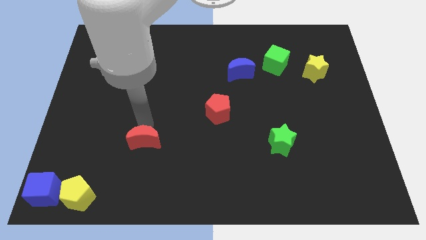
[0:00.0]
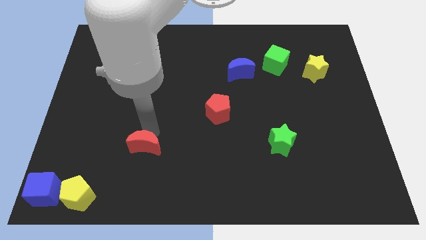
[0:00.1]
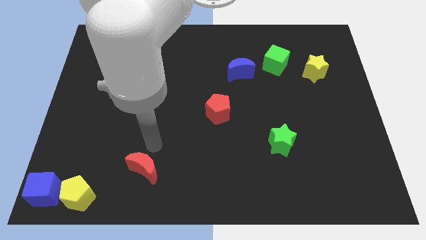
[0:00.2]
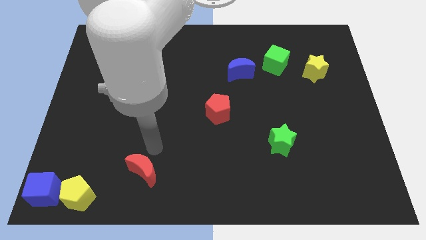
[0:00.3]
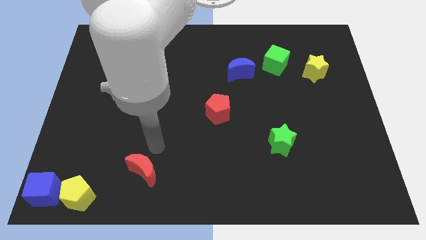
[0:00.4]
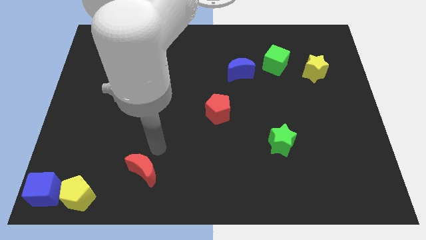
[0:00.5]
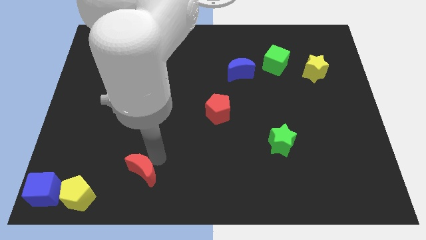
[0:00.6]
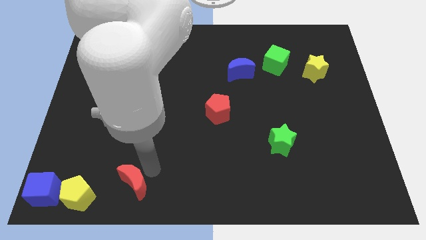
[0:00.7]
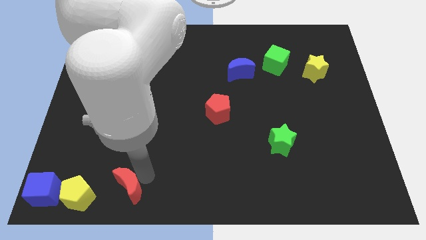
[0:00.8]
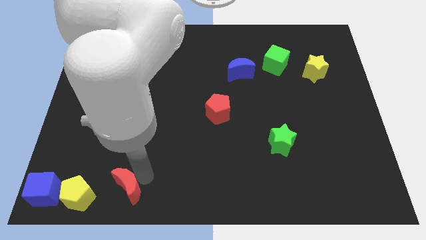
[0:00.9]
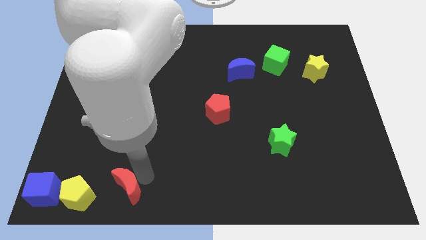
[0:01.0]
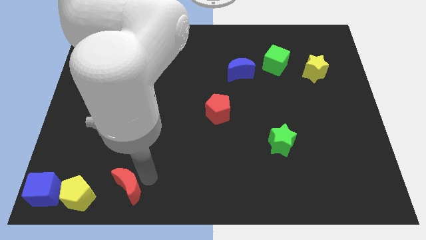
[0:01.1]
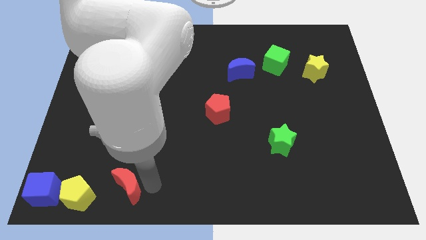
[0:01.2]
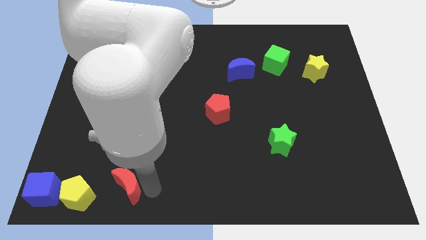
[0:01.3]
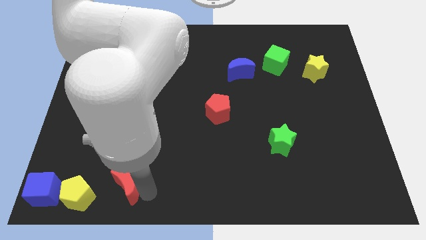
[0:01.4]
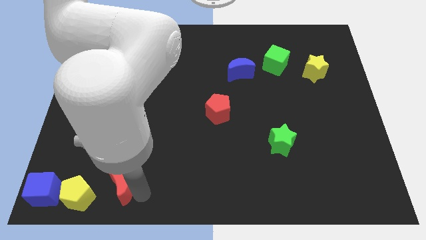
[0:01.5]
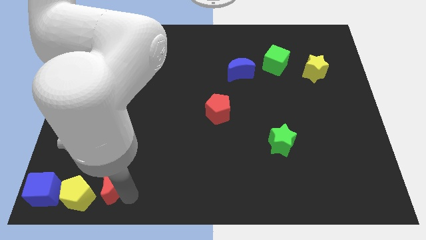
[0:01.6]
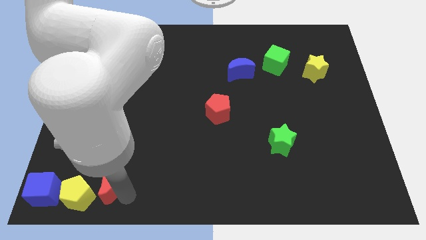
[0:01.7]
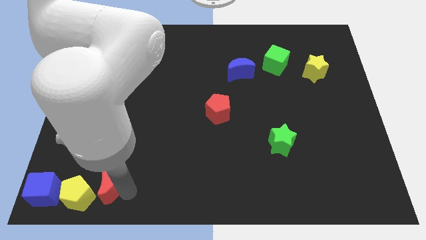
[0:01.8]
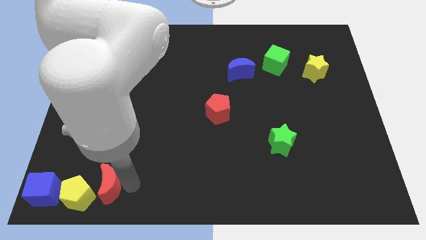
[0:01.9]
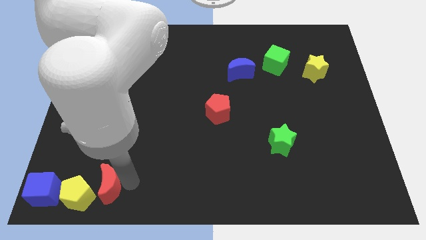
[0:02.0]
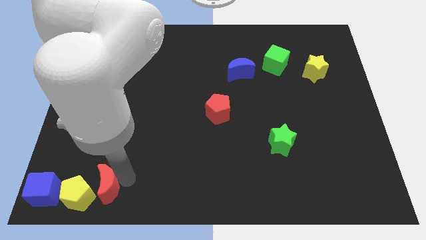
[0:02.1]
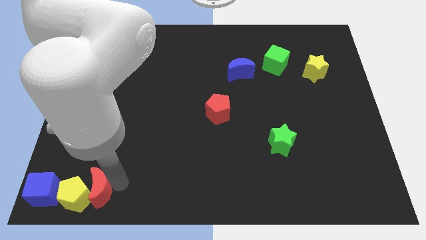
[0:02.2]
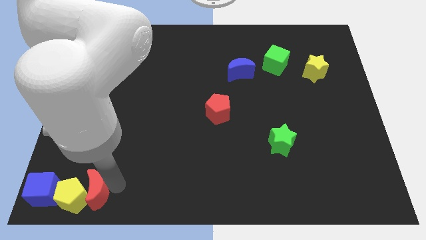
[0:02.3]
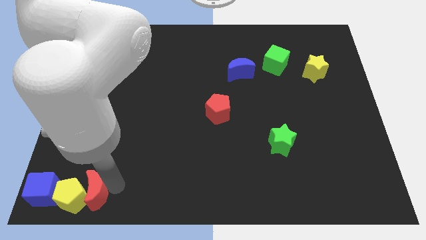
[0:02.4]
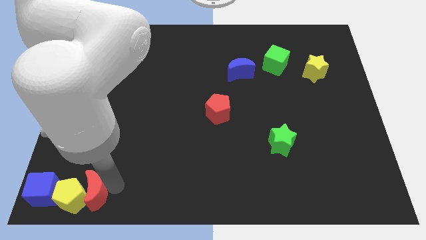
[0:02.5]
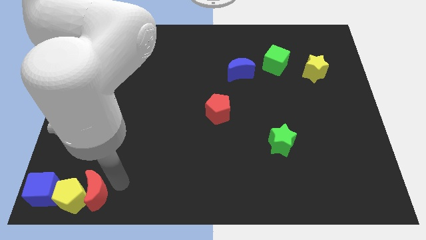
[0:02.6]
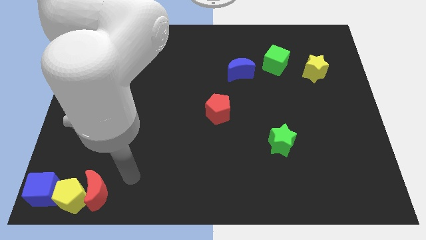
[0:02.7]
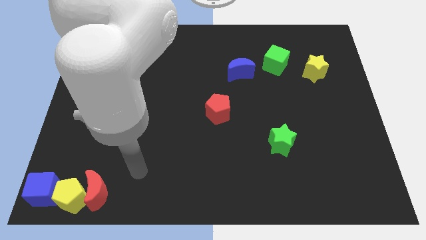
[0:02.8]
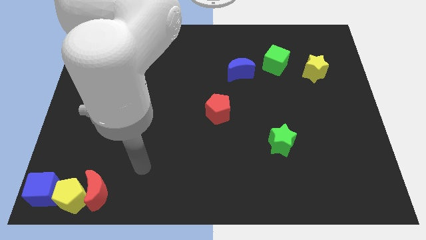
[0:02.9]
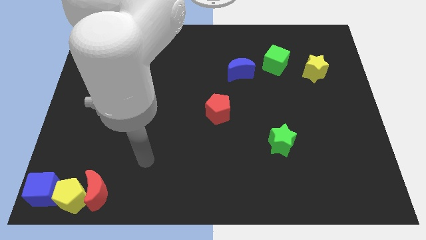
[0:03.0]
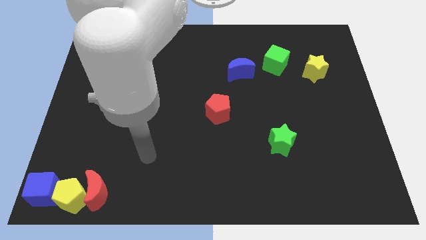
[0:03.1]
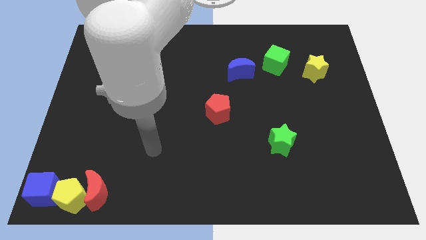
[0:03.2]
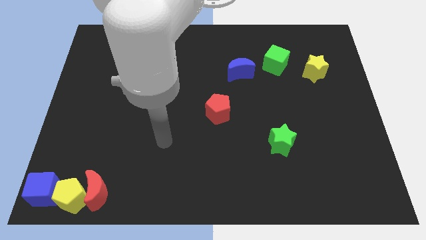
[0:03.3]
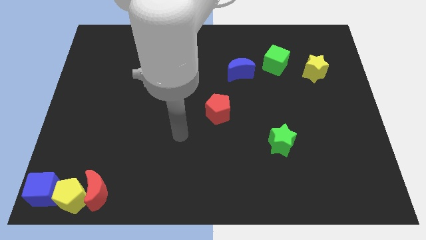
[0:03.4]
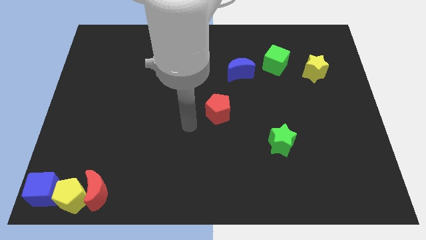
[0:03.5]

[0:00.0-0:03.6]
move red moon right beside yellow pentagon

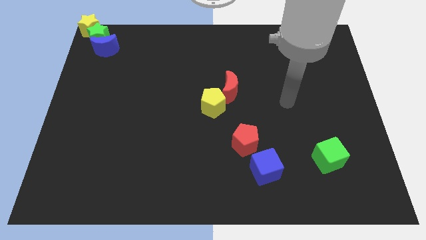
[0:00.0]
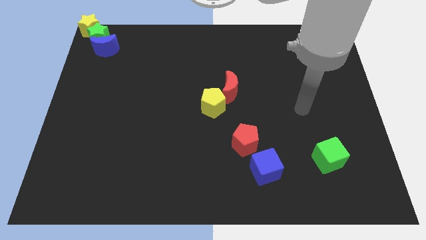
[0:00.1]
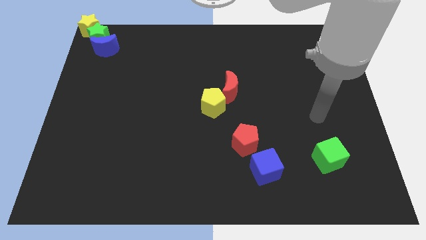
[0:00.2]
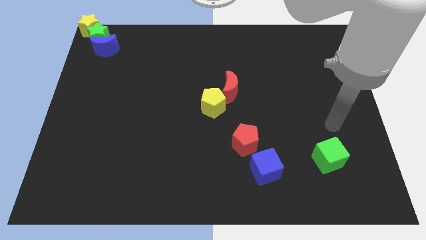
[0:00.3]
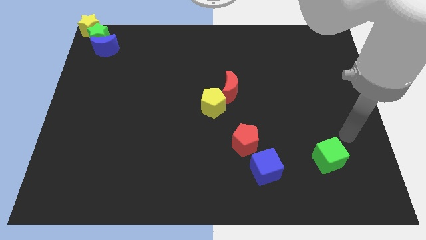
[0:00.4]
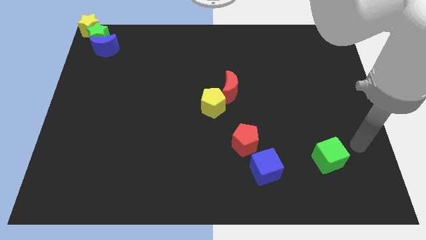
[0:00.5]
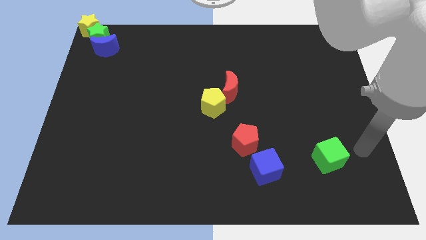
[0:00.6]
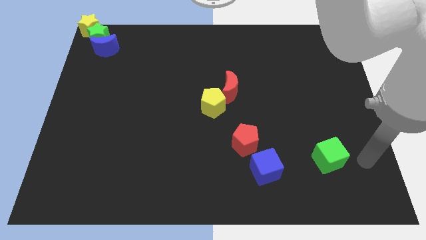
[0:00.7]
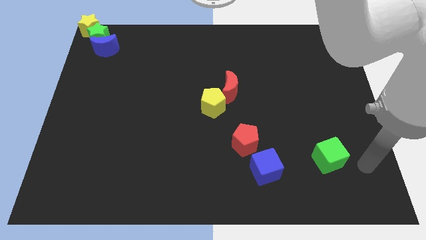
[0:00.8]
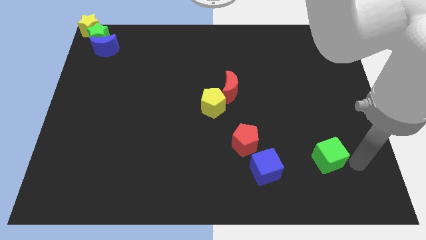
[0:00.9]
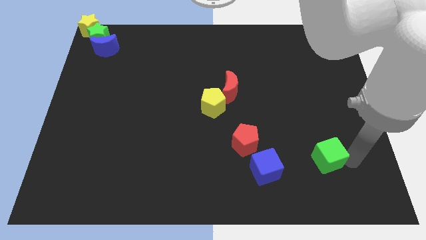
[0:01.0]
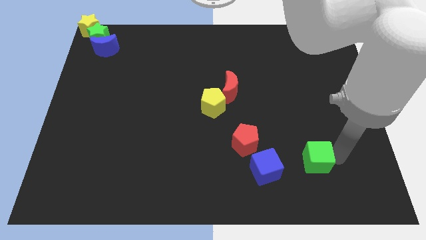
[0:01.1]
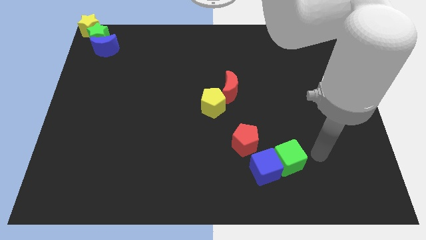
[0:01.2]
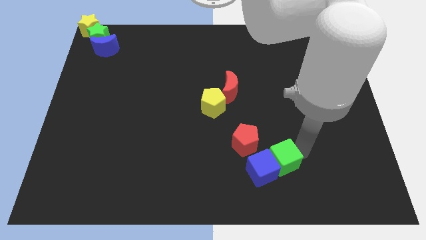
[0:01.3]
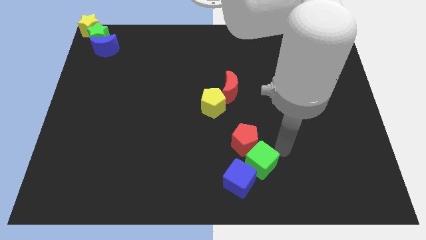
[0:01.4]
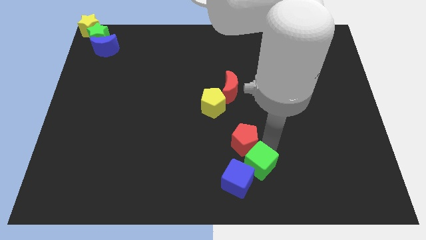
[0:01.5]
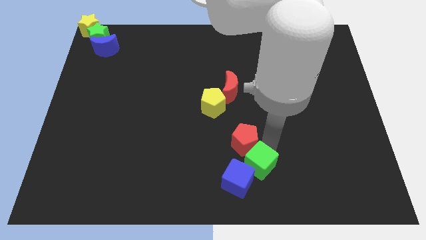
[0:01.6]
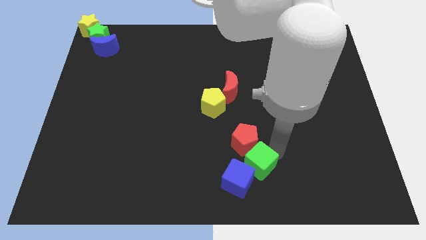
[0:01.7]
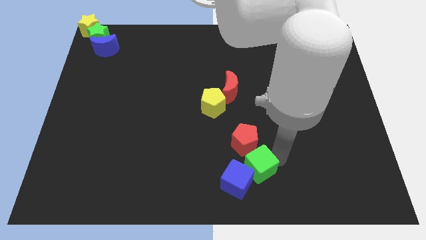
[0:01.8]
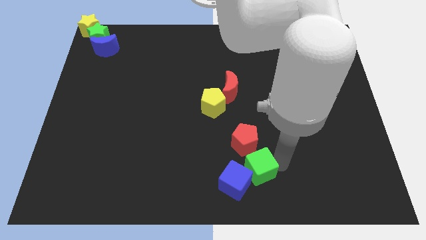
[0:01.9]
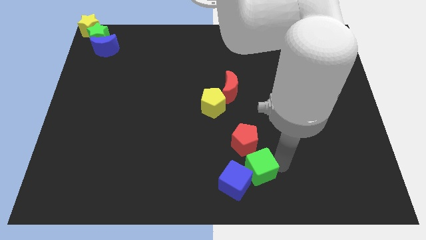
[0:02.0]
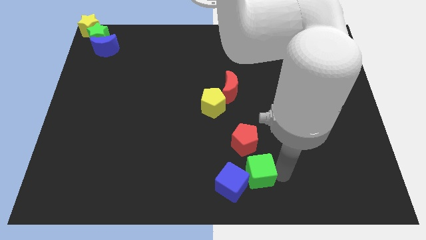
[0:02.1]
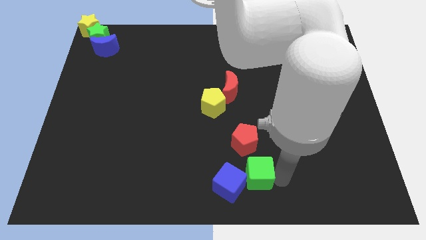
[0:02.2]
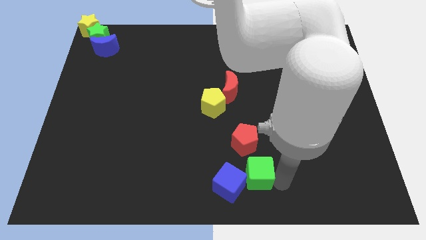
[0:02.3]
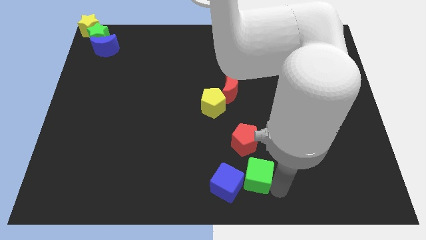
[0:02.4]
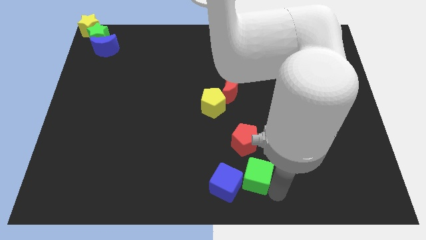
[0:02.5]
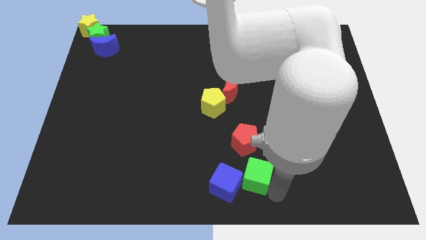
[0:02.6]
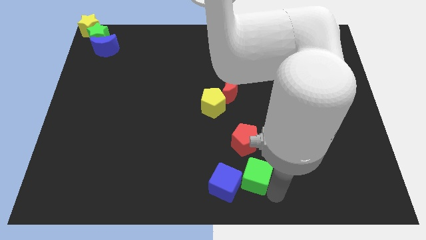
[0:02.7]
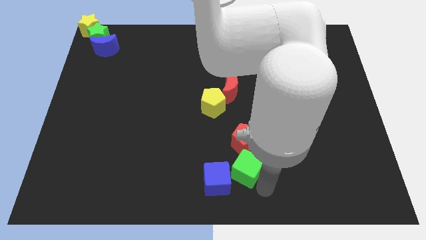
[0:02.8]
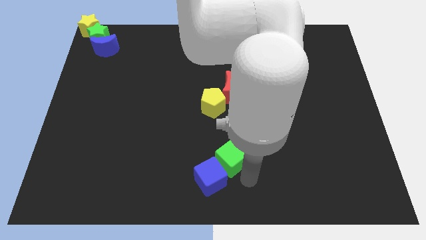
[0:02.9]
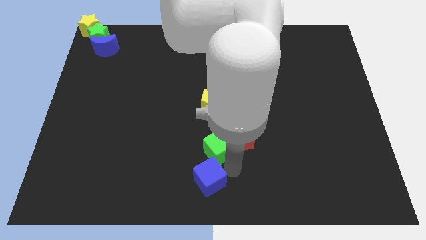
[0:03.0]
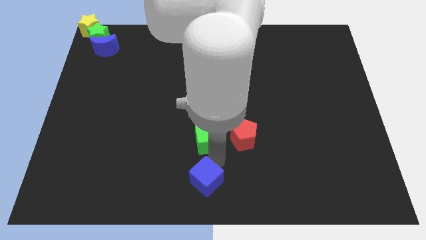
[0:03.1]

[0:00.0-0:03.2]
push the green cube to the bottom side of the yellow pentagon

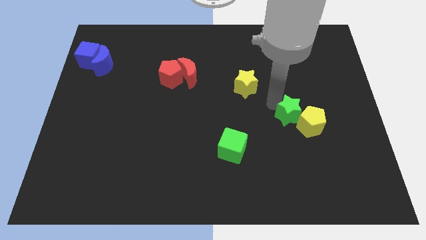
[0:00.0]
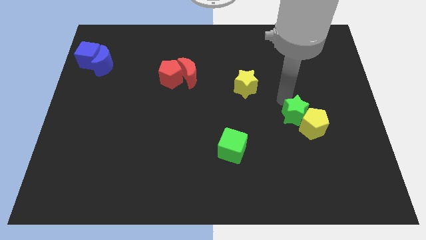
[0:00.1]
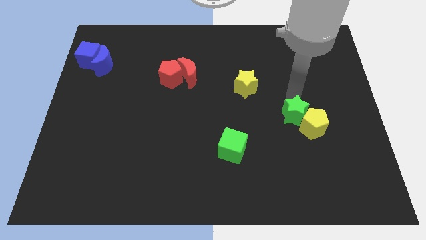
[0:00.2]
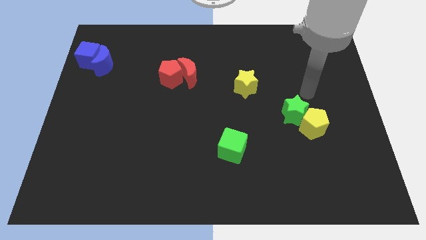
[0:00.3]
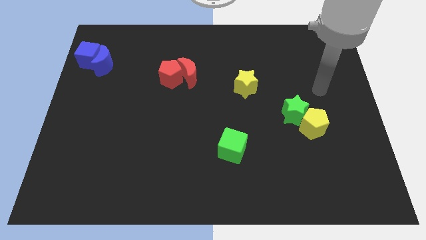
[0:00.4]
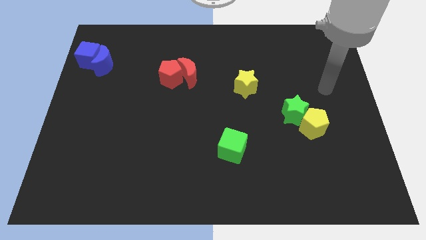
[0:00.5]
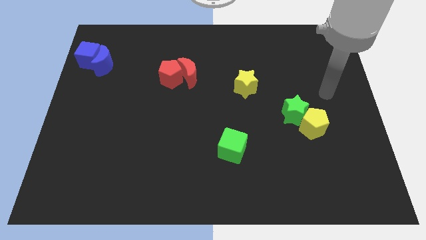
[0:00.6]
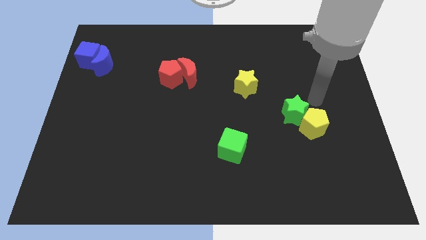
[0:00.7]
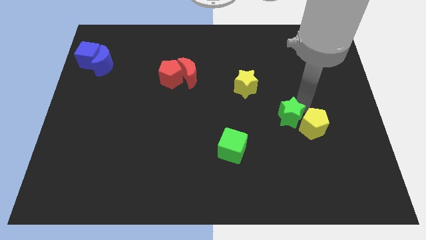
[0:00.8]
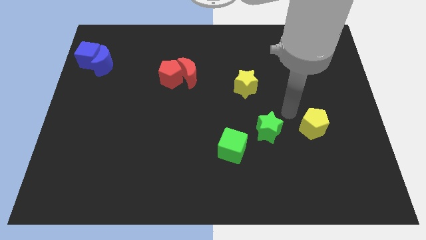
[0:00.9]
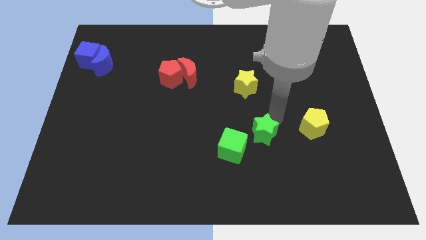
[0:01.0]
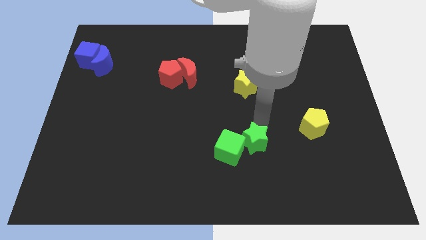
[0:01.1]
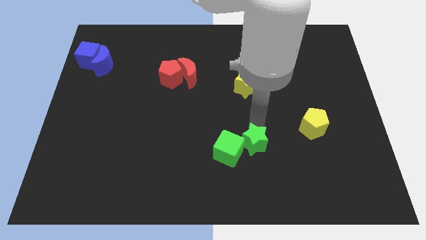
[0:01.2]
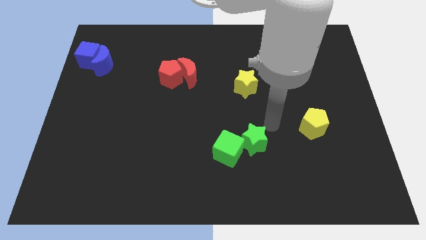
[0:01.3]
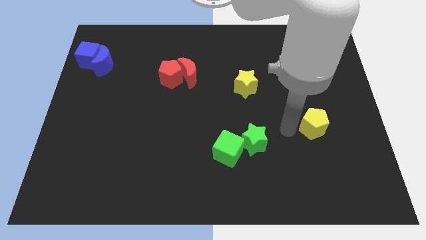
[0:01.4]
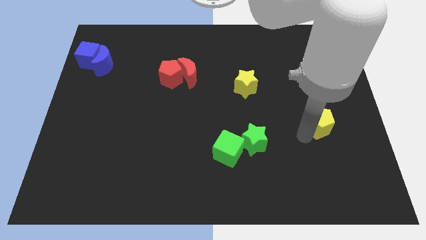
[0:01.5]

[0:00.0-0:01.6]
push the green star into the green cube

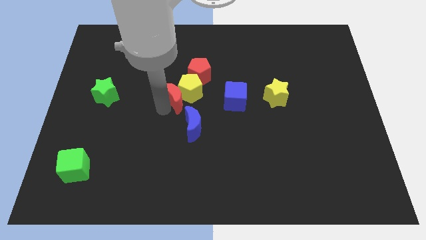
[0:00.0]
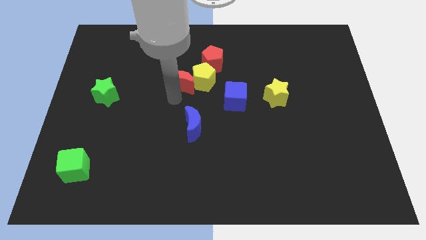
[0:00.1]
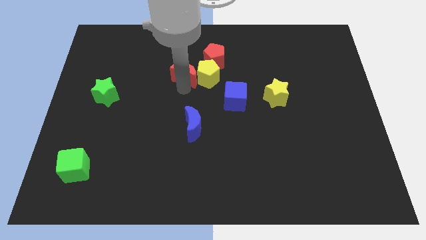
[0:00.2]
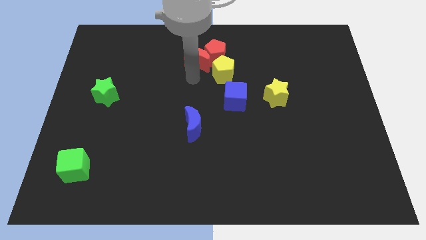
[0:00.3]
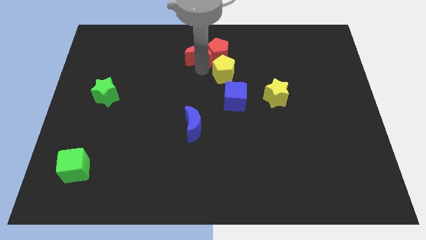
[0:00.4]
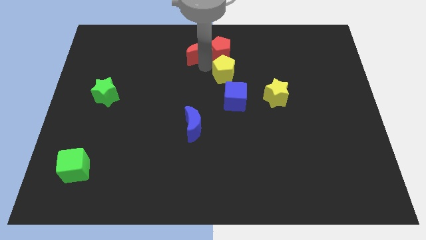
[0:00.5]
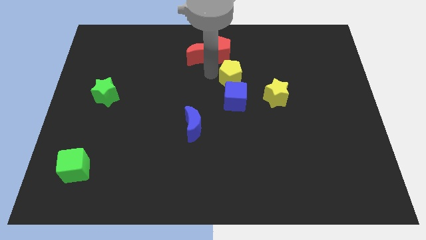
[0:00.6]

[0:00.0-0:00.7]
place both red crescent and red pentagon to the top center of the board
